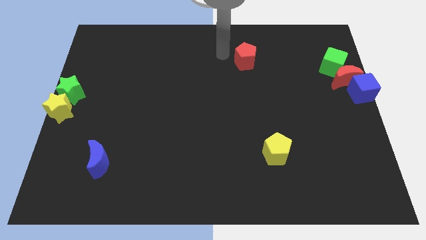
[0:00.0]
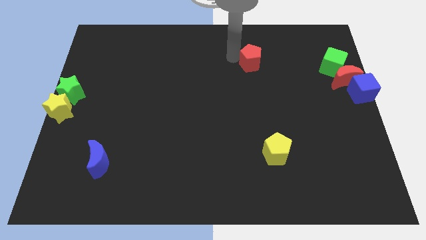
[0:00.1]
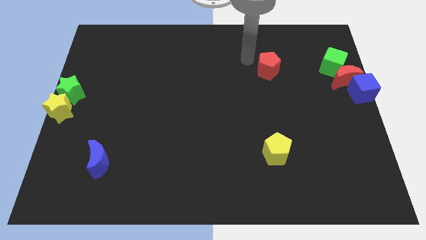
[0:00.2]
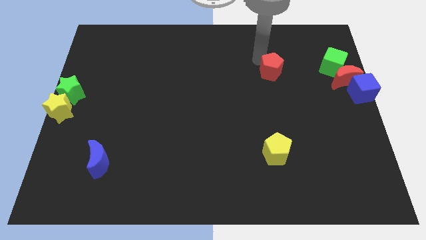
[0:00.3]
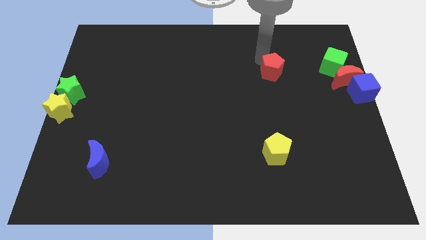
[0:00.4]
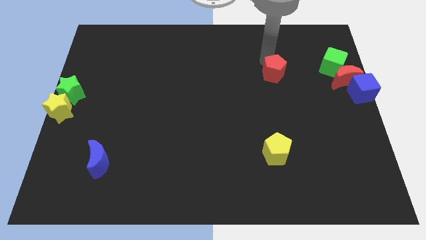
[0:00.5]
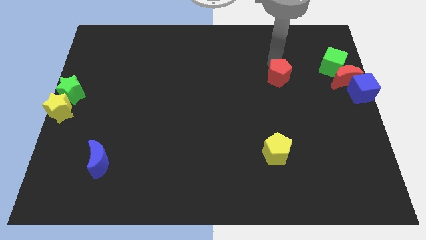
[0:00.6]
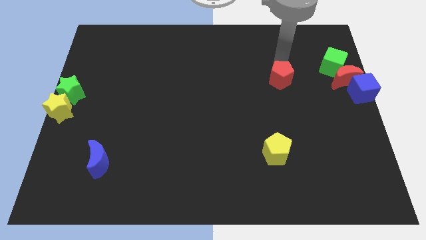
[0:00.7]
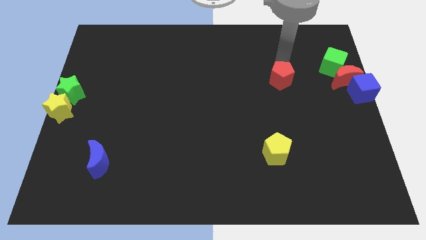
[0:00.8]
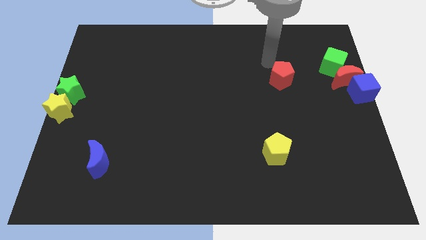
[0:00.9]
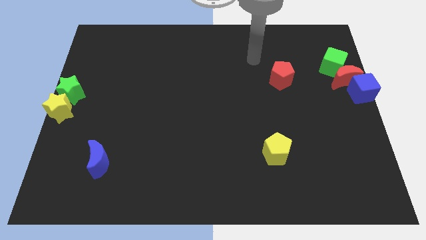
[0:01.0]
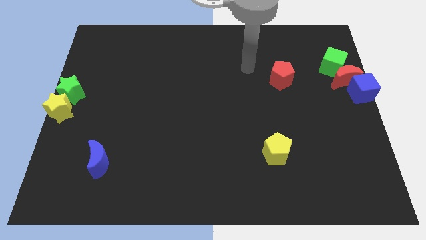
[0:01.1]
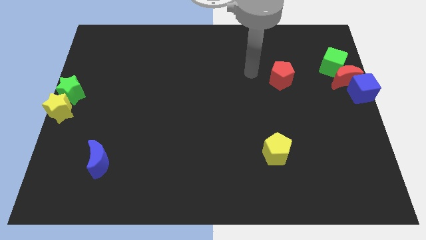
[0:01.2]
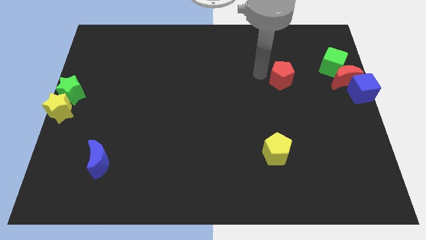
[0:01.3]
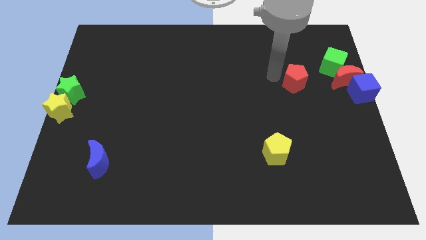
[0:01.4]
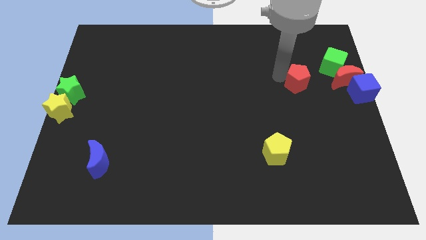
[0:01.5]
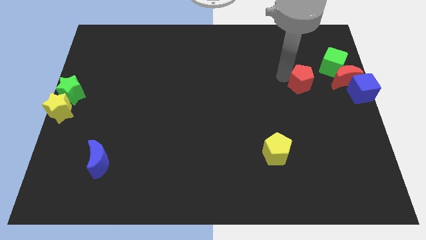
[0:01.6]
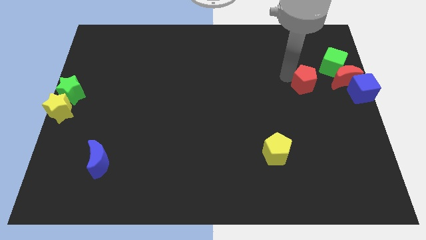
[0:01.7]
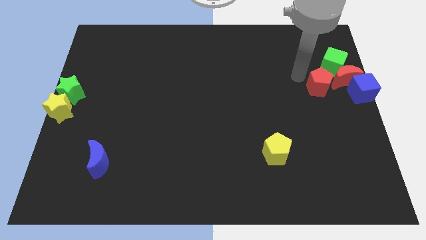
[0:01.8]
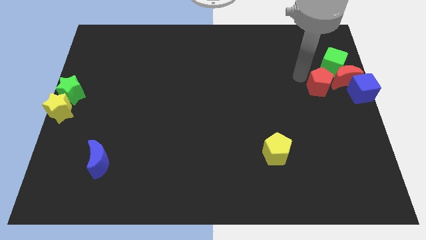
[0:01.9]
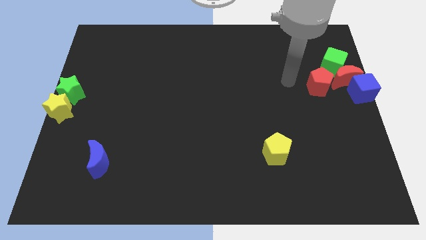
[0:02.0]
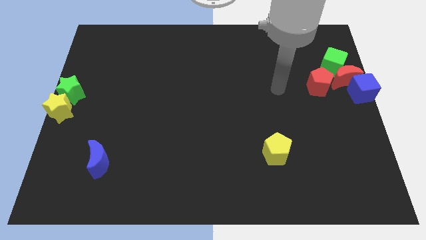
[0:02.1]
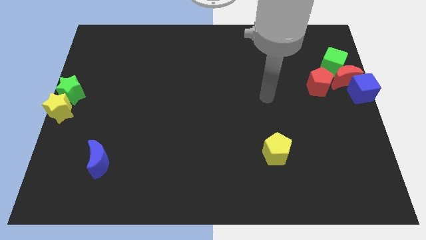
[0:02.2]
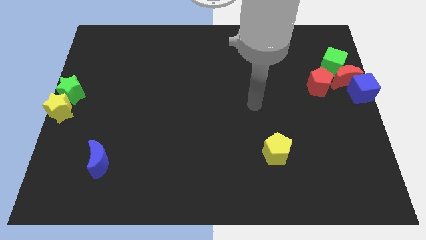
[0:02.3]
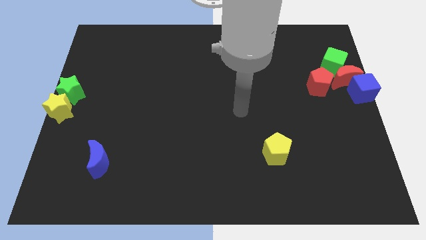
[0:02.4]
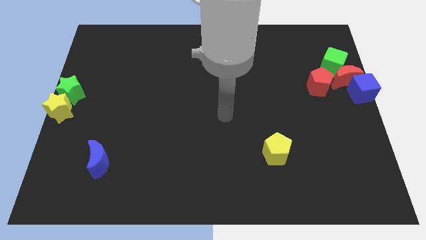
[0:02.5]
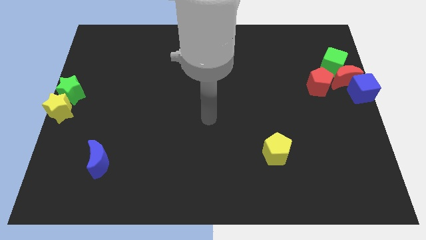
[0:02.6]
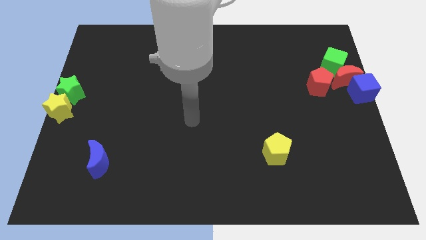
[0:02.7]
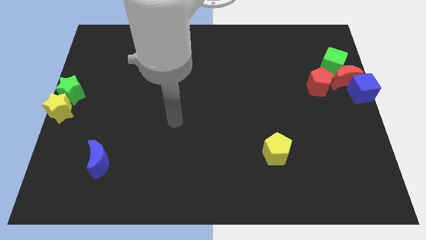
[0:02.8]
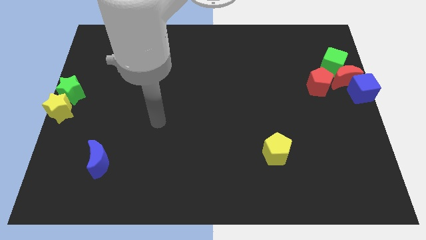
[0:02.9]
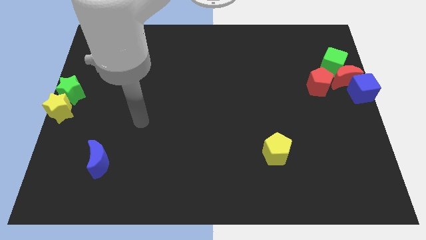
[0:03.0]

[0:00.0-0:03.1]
move red pentagon left beside the red moon

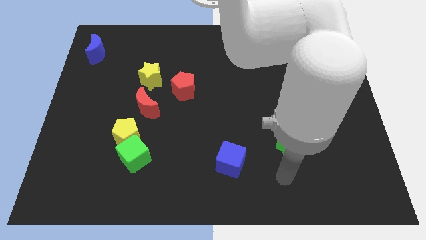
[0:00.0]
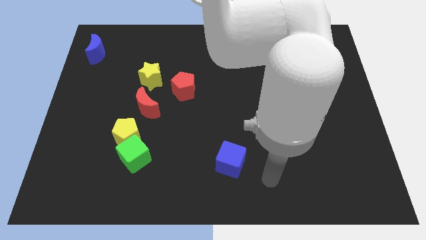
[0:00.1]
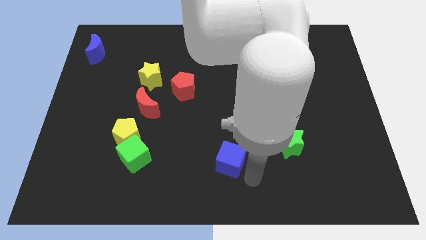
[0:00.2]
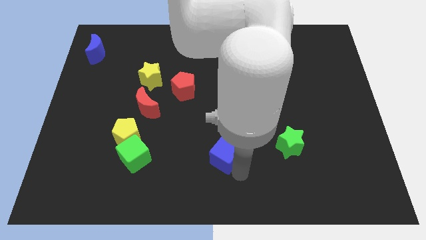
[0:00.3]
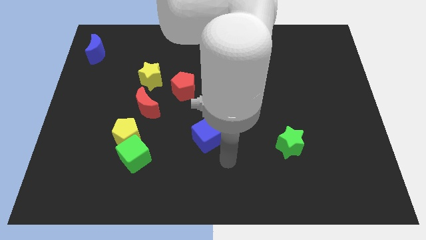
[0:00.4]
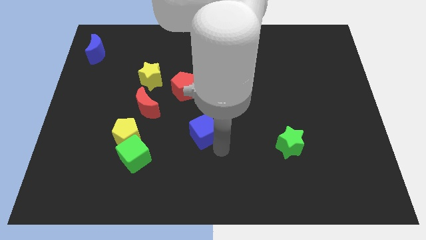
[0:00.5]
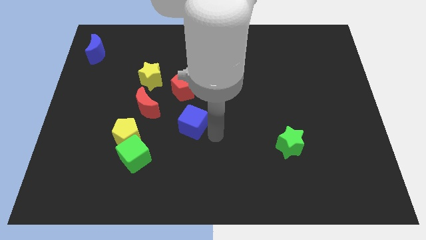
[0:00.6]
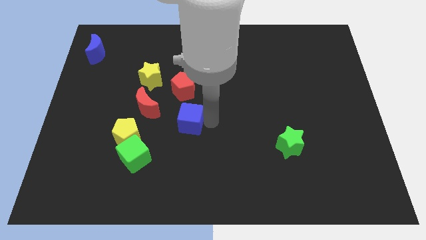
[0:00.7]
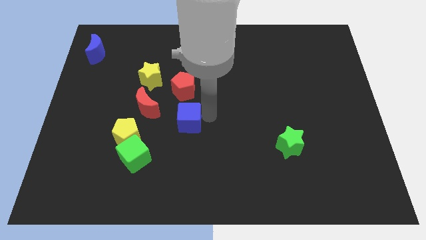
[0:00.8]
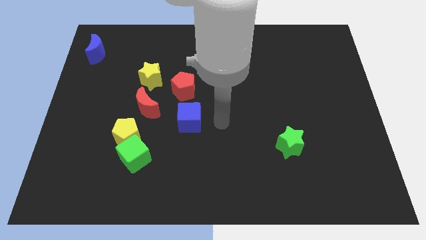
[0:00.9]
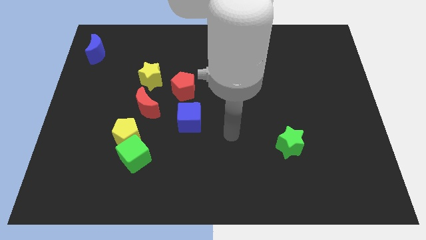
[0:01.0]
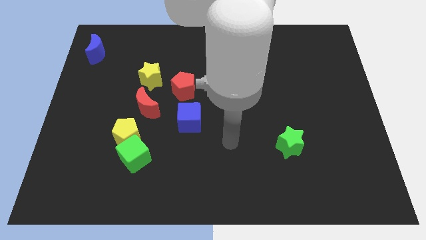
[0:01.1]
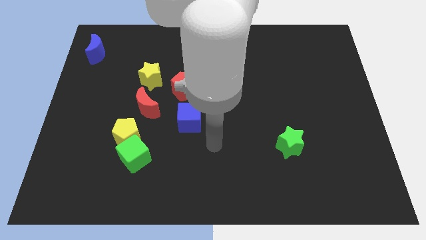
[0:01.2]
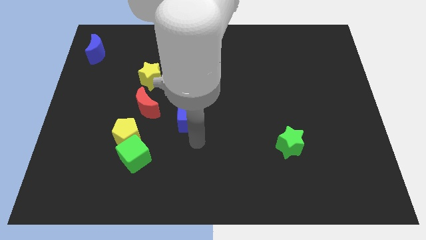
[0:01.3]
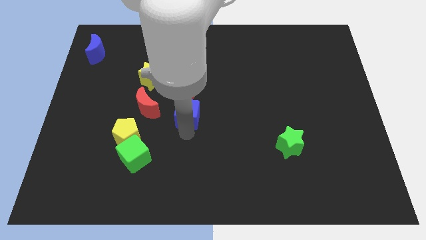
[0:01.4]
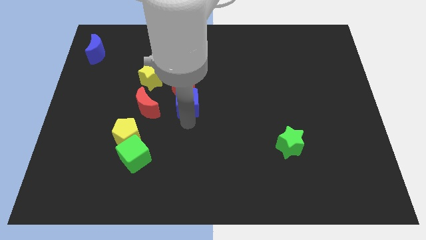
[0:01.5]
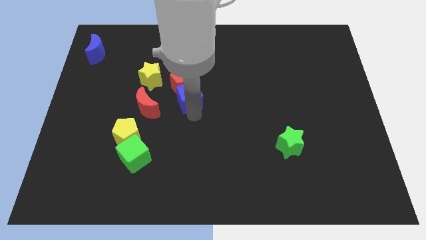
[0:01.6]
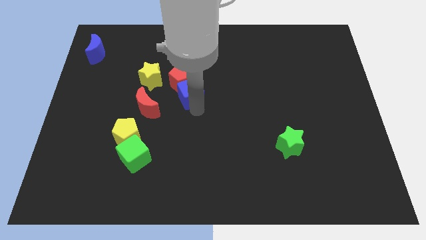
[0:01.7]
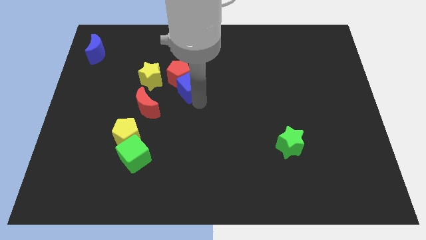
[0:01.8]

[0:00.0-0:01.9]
move the blue cube below the red pentagon

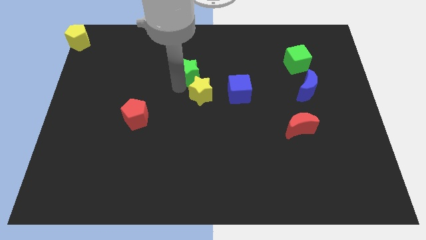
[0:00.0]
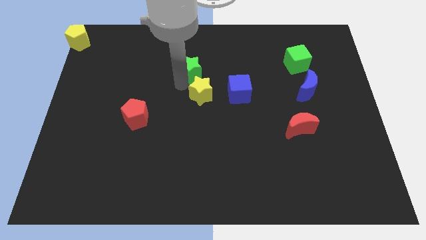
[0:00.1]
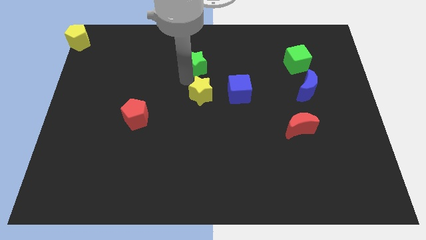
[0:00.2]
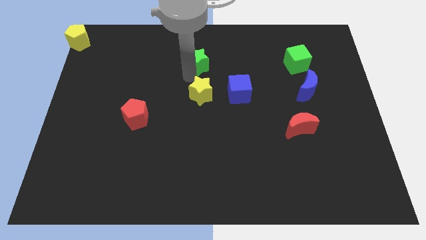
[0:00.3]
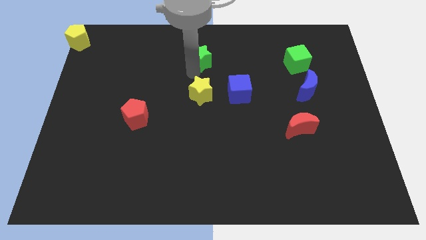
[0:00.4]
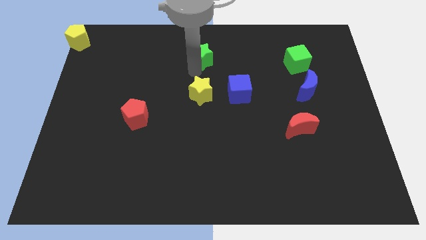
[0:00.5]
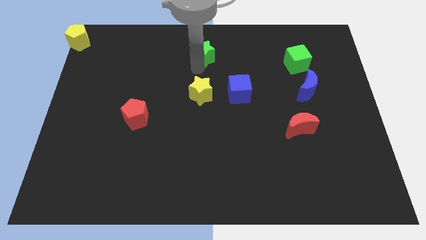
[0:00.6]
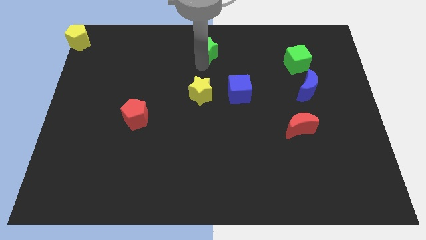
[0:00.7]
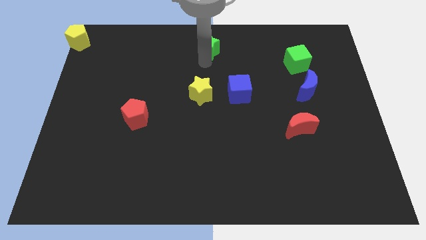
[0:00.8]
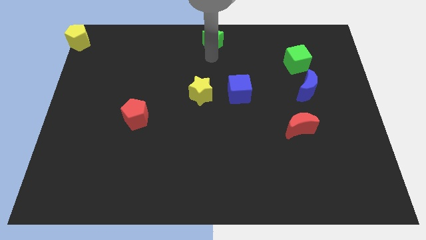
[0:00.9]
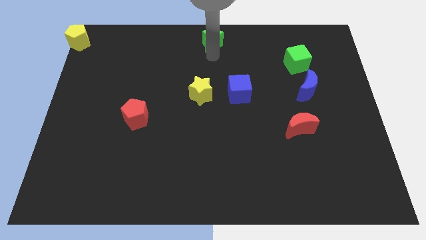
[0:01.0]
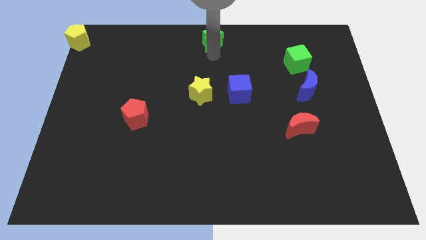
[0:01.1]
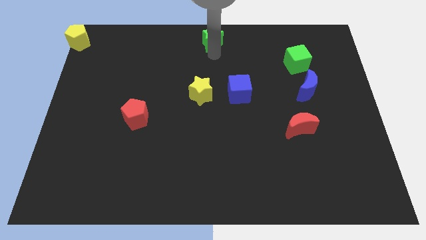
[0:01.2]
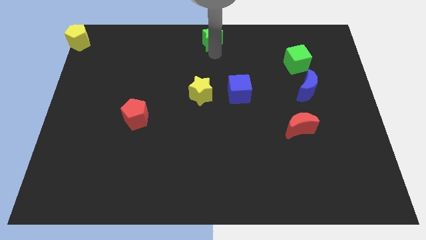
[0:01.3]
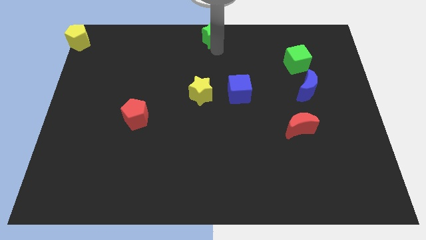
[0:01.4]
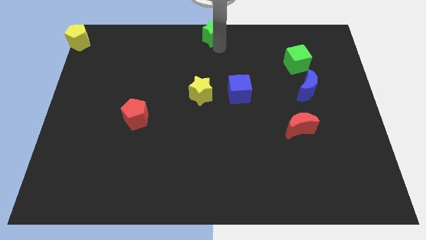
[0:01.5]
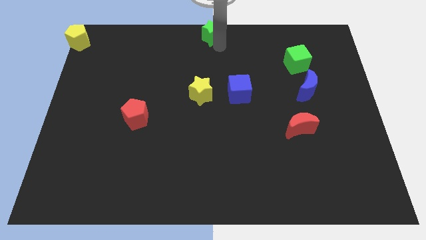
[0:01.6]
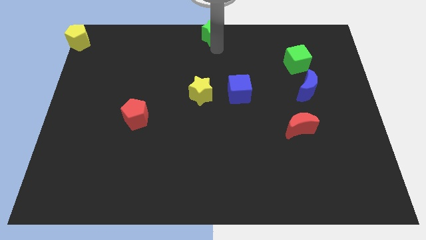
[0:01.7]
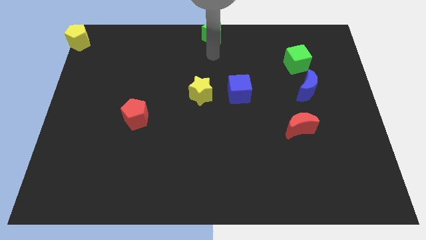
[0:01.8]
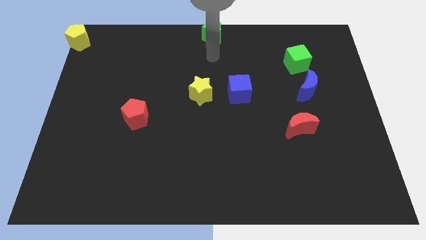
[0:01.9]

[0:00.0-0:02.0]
place green star at the top center of the board

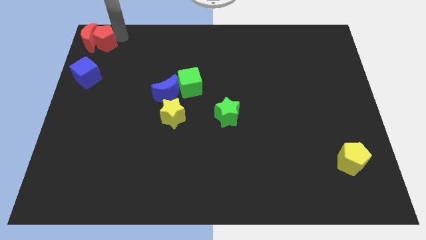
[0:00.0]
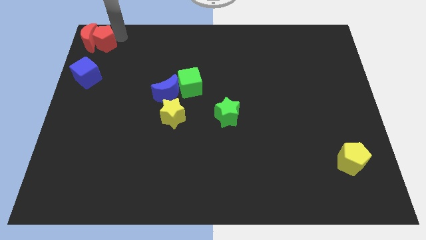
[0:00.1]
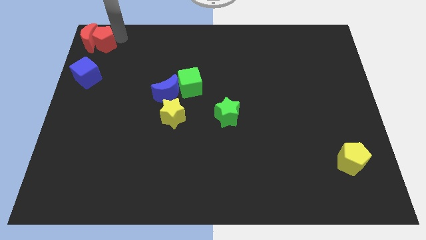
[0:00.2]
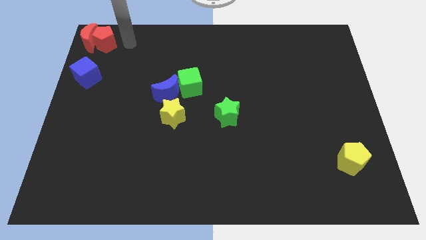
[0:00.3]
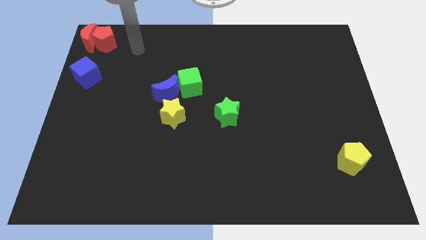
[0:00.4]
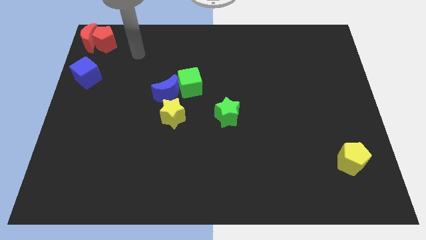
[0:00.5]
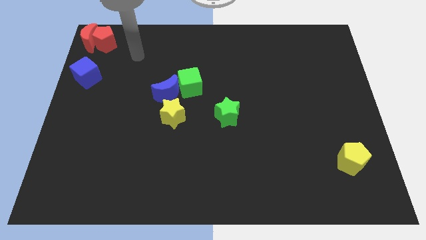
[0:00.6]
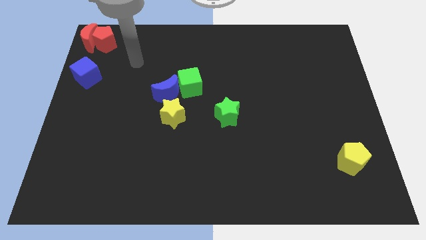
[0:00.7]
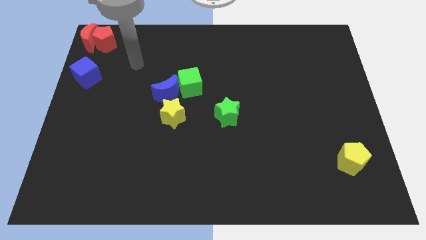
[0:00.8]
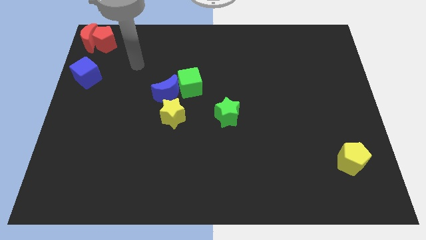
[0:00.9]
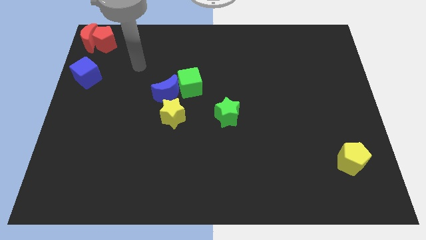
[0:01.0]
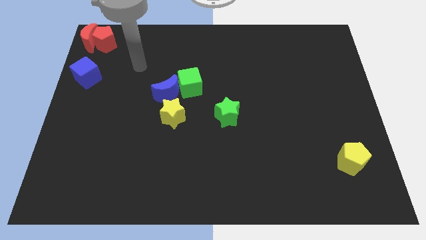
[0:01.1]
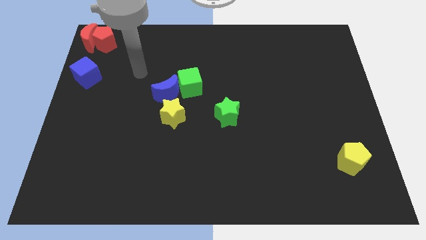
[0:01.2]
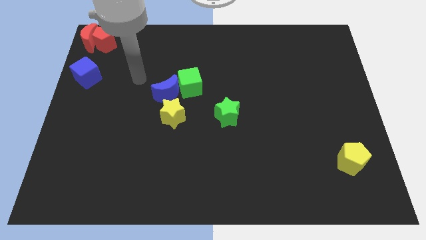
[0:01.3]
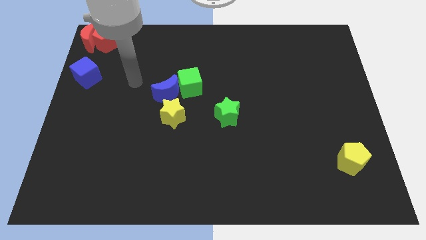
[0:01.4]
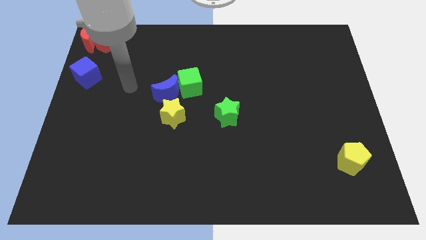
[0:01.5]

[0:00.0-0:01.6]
move your arm away from red blocks

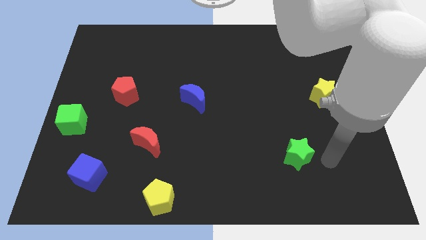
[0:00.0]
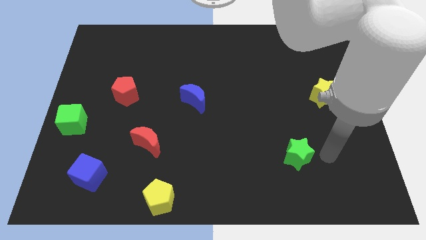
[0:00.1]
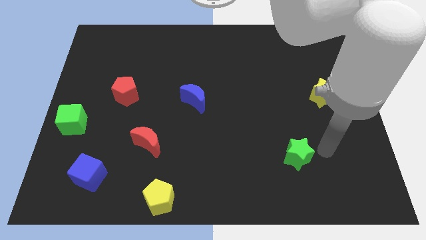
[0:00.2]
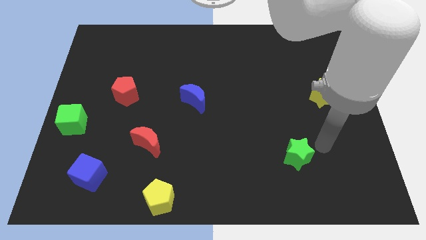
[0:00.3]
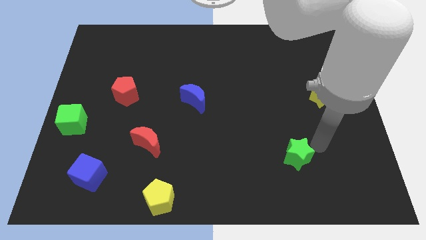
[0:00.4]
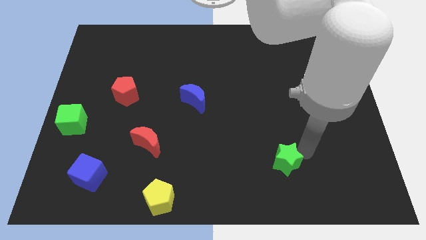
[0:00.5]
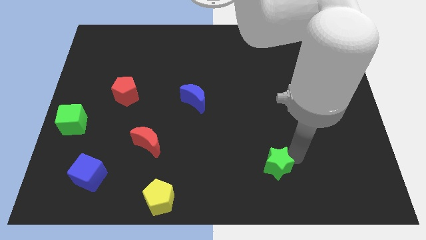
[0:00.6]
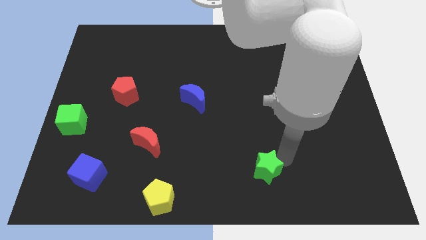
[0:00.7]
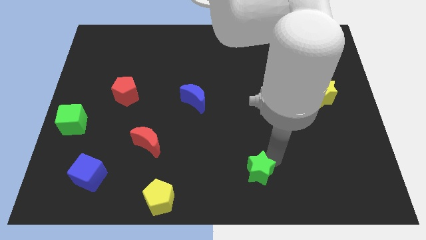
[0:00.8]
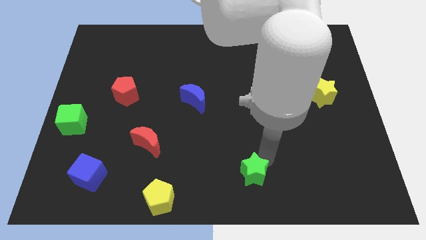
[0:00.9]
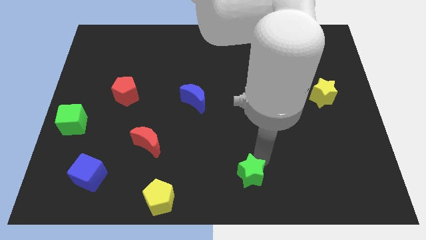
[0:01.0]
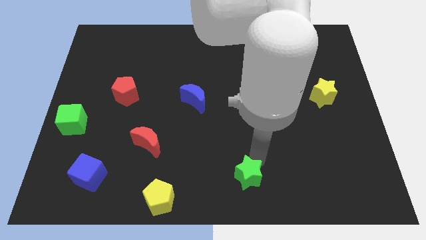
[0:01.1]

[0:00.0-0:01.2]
move the green star parallel to the right of the yellow pentagon
